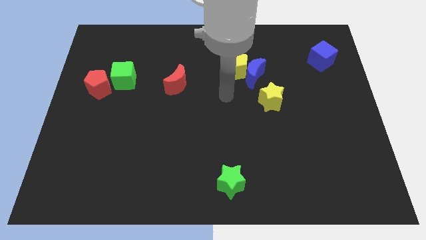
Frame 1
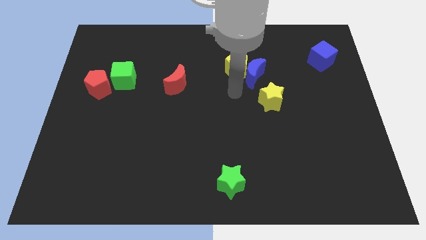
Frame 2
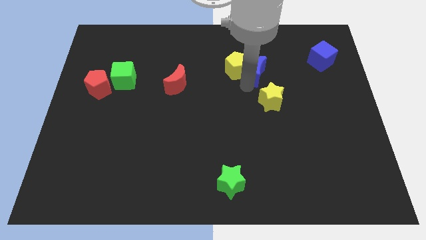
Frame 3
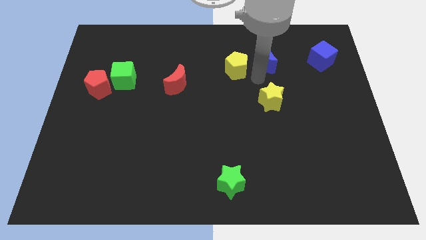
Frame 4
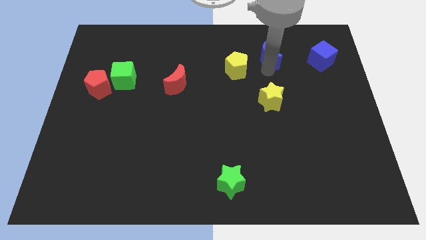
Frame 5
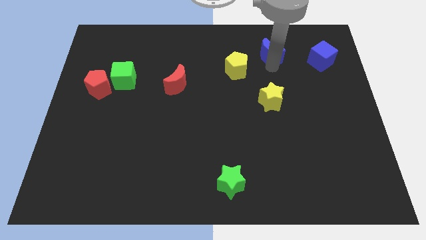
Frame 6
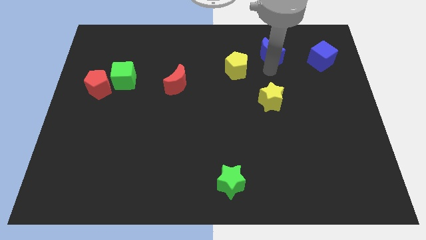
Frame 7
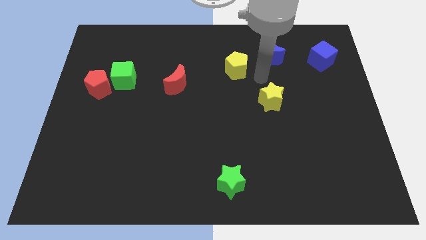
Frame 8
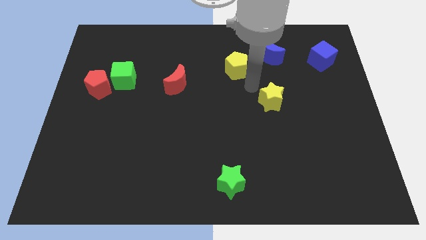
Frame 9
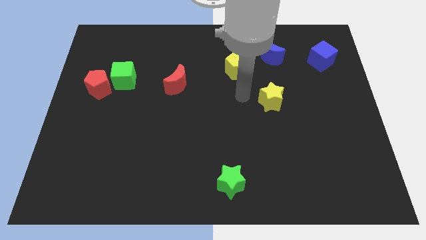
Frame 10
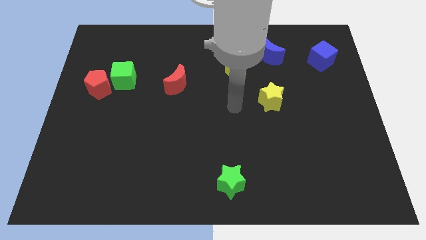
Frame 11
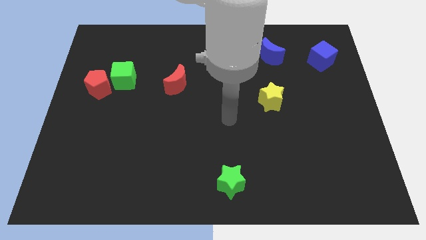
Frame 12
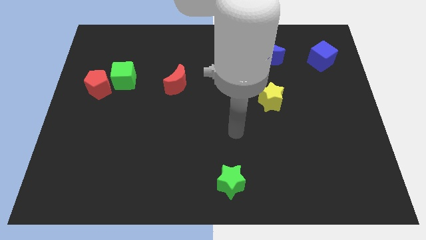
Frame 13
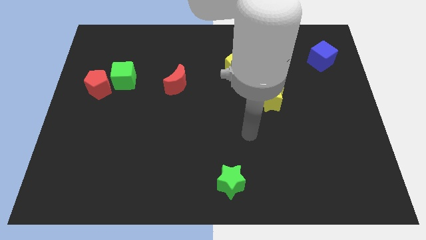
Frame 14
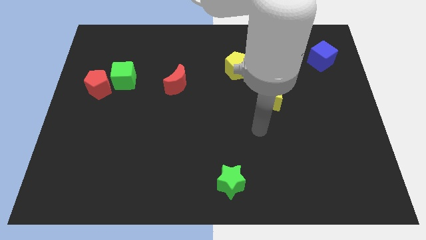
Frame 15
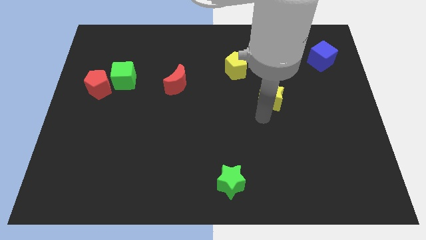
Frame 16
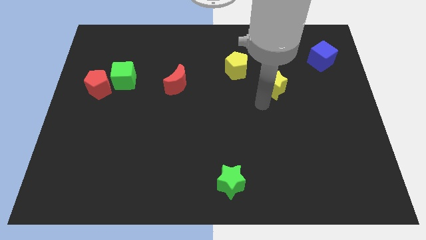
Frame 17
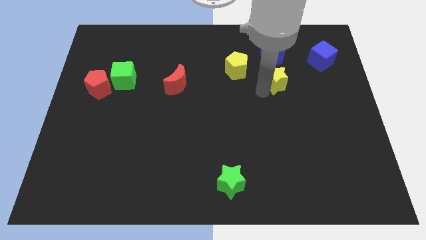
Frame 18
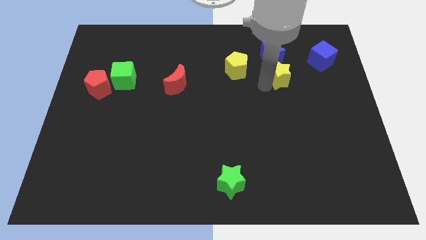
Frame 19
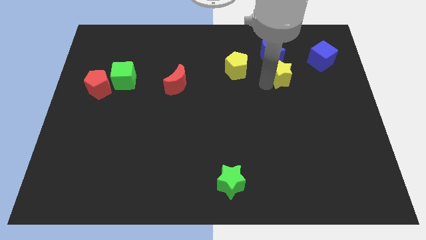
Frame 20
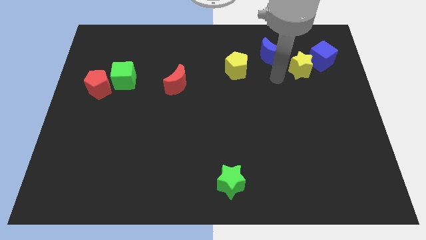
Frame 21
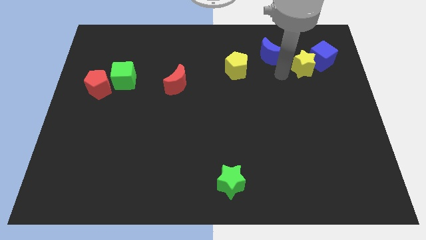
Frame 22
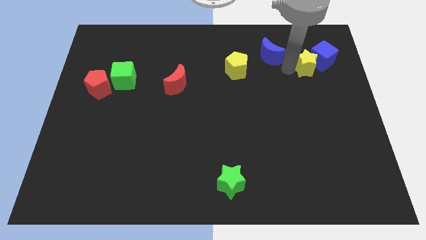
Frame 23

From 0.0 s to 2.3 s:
push yellow star into blue cube

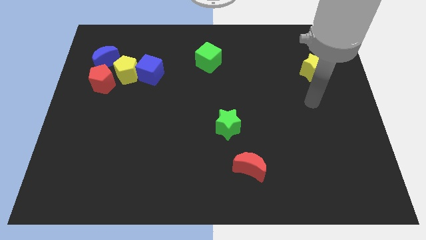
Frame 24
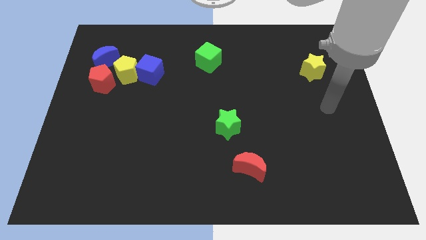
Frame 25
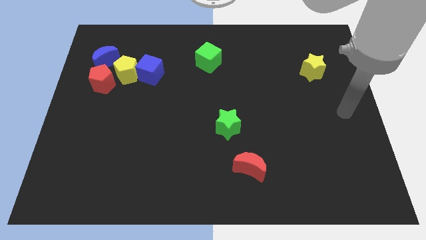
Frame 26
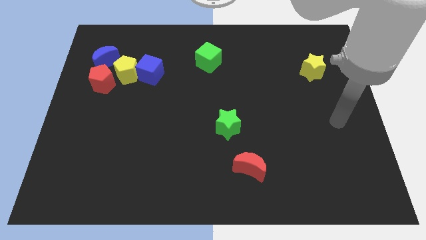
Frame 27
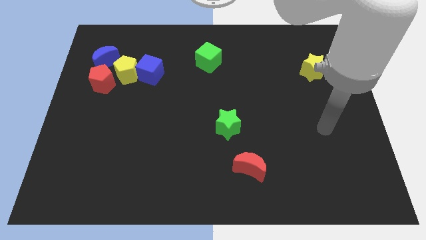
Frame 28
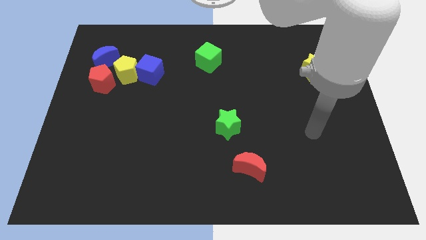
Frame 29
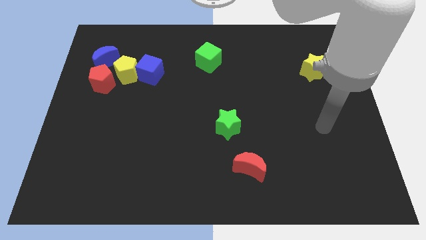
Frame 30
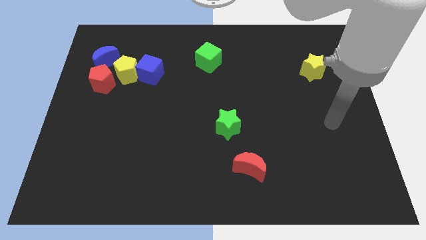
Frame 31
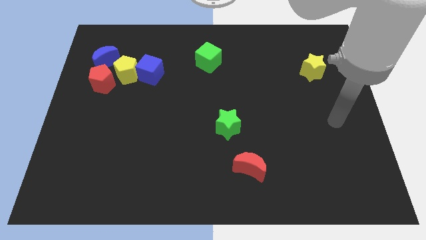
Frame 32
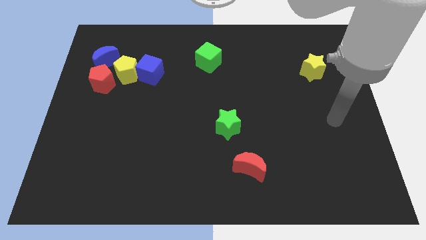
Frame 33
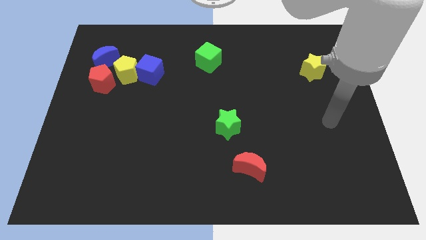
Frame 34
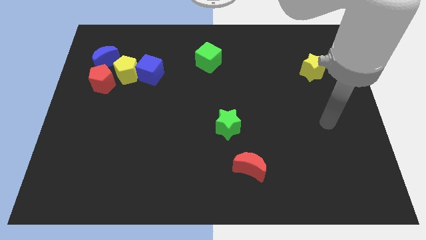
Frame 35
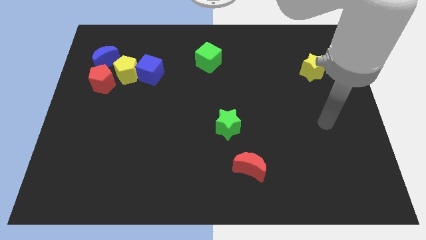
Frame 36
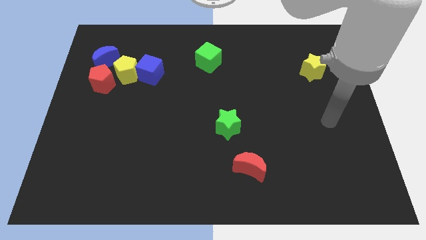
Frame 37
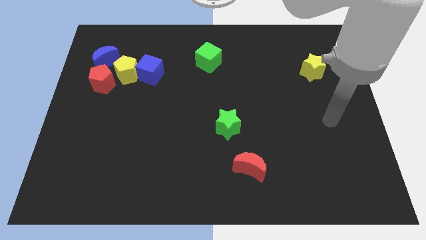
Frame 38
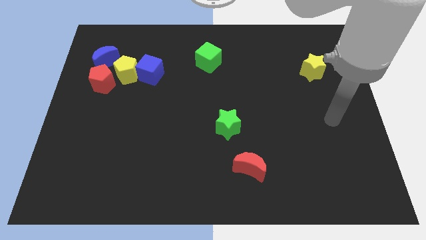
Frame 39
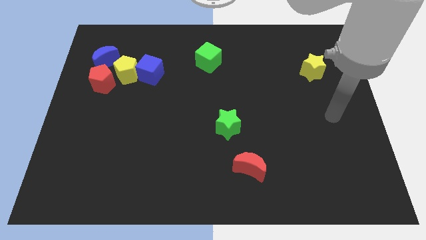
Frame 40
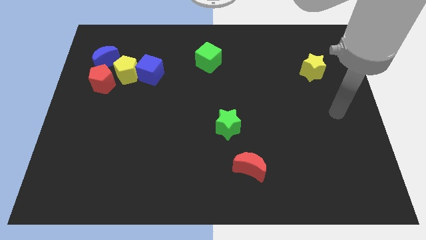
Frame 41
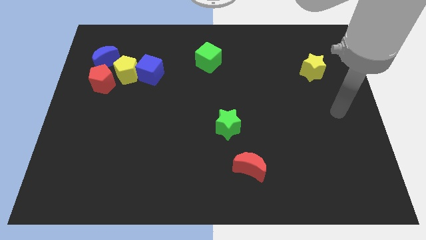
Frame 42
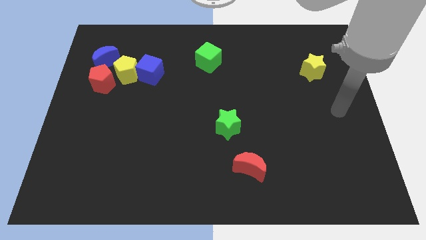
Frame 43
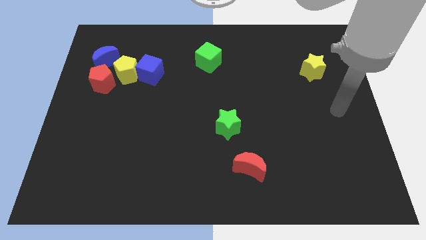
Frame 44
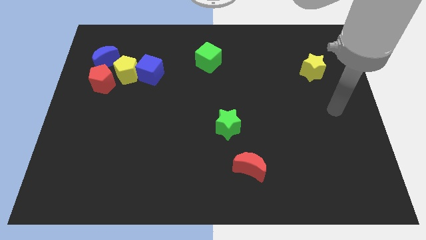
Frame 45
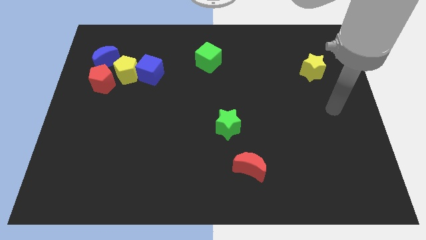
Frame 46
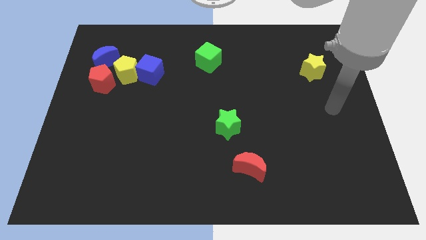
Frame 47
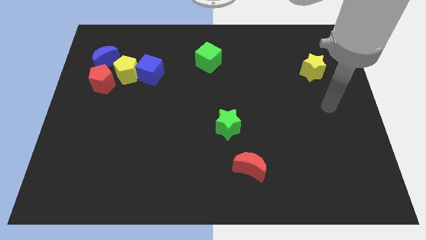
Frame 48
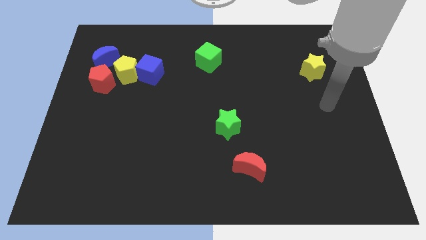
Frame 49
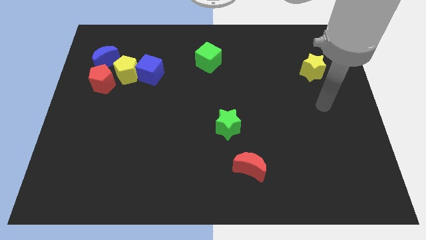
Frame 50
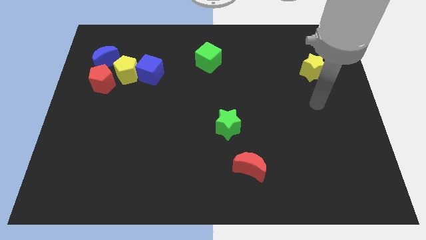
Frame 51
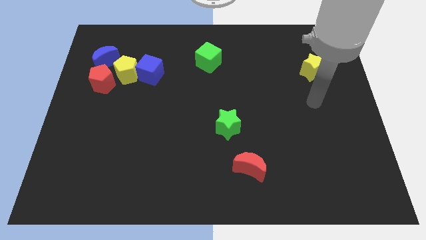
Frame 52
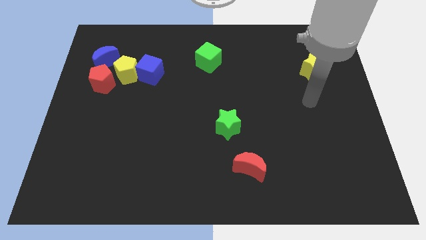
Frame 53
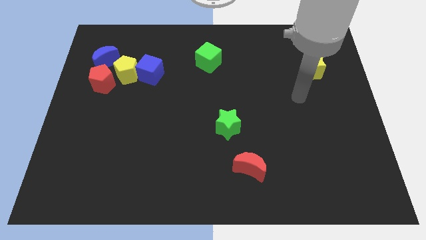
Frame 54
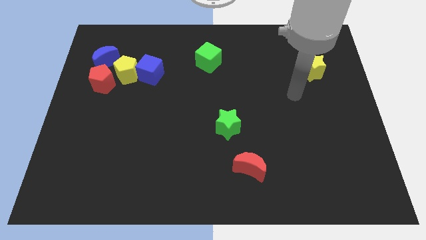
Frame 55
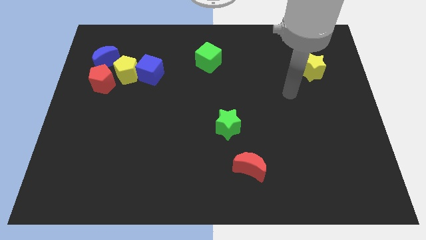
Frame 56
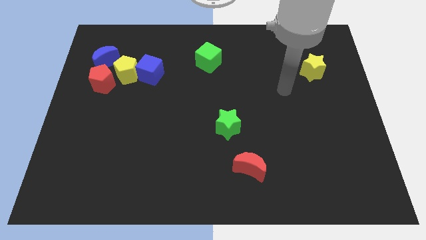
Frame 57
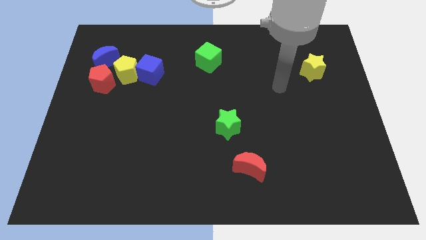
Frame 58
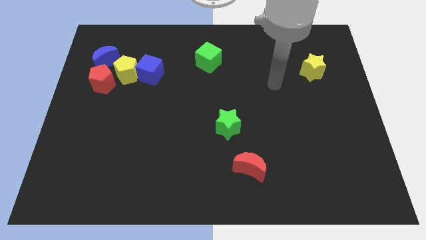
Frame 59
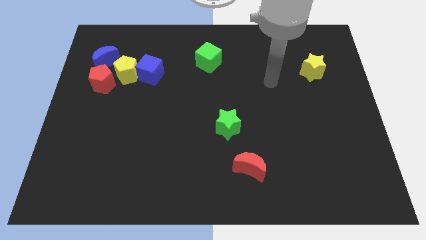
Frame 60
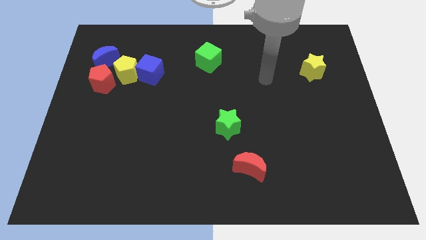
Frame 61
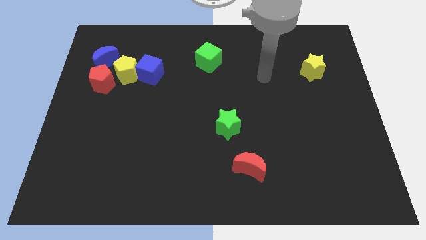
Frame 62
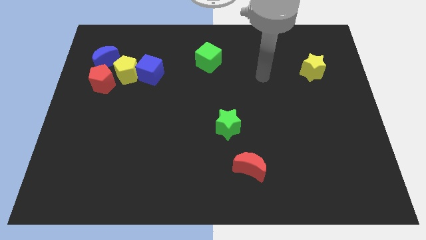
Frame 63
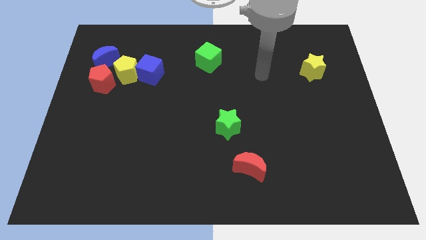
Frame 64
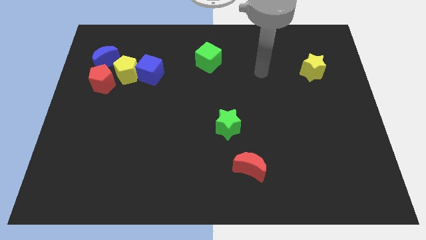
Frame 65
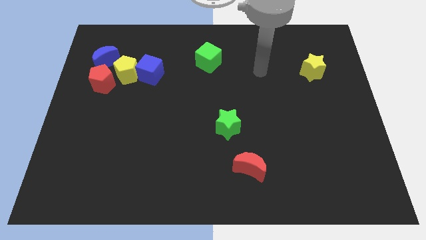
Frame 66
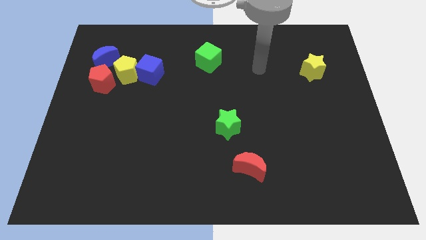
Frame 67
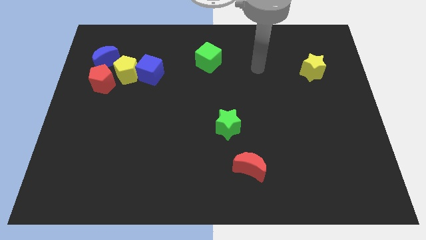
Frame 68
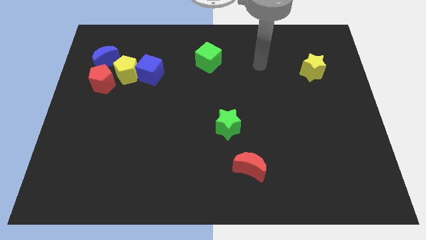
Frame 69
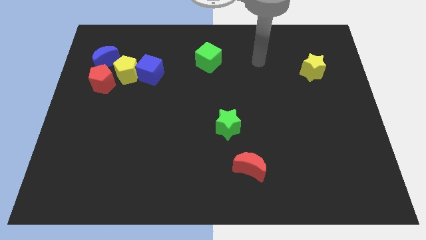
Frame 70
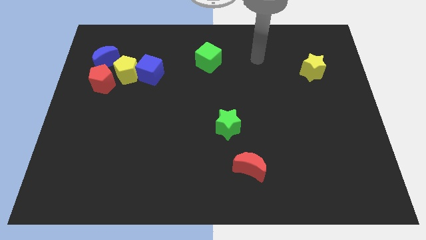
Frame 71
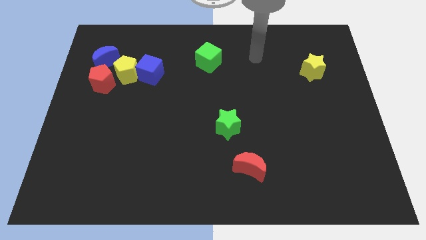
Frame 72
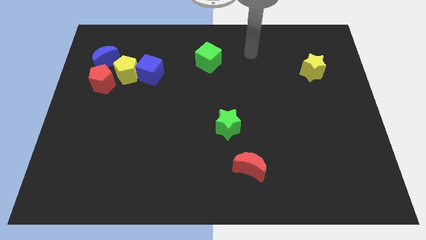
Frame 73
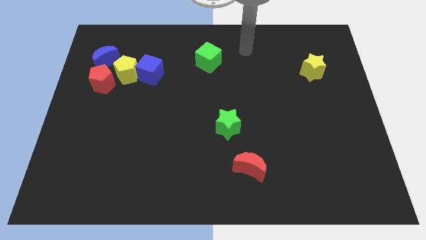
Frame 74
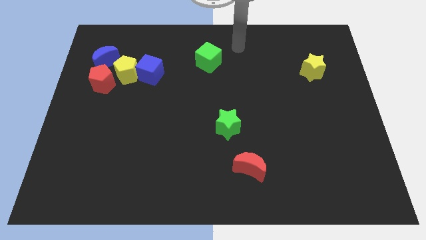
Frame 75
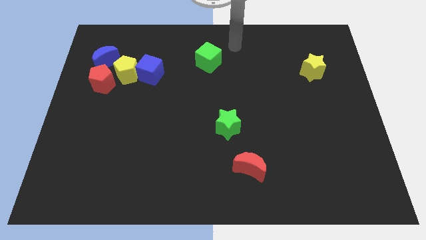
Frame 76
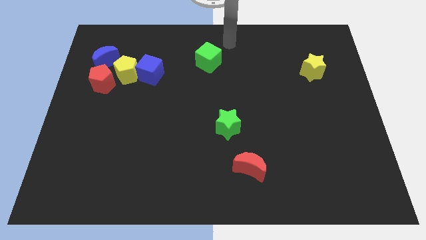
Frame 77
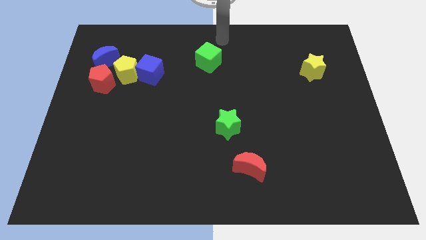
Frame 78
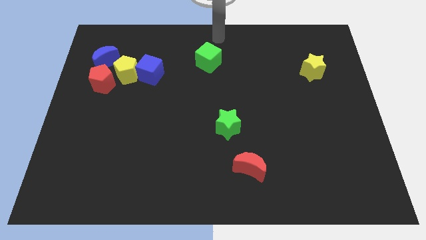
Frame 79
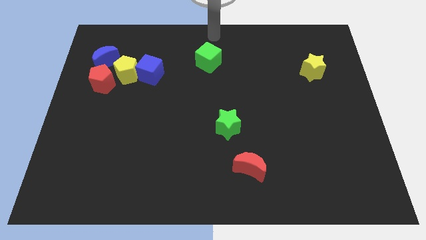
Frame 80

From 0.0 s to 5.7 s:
place arm above the green cube

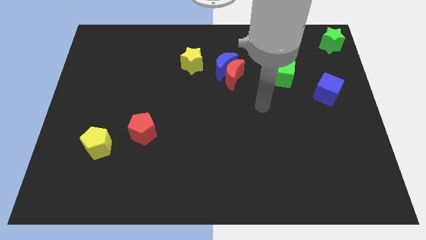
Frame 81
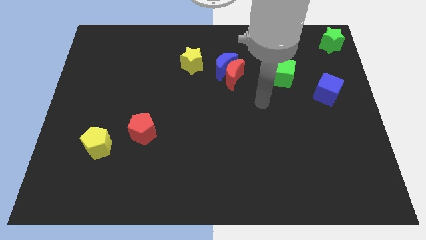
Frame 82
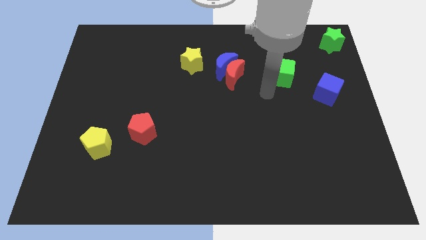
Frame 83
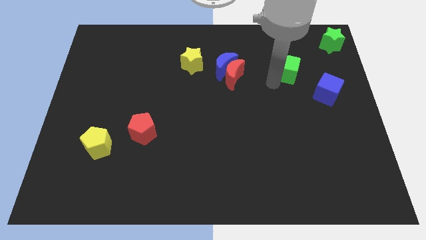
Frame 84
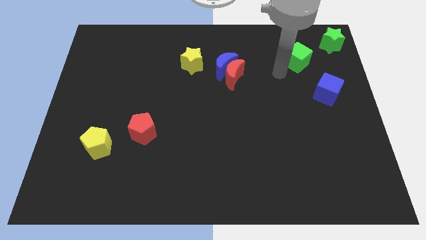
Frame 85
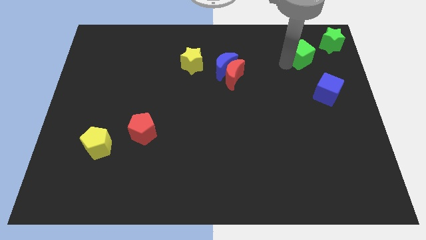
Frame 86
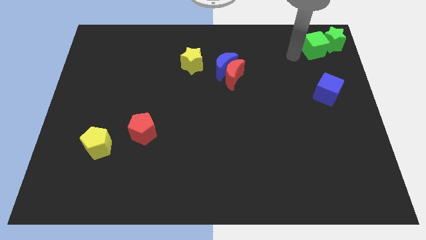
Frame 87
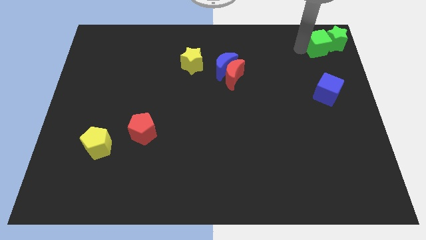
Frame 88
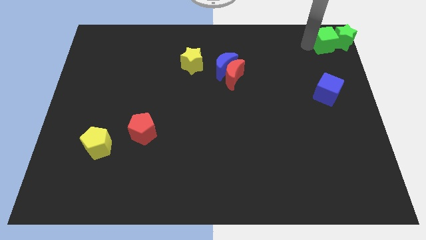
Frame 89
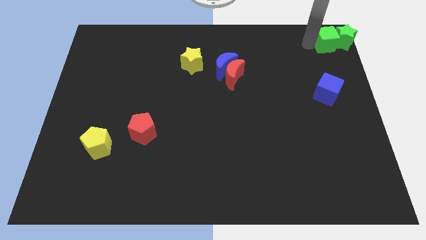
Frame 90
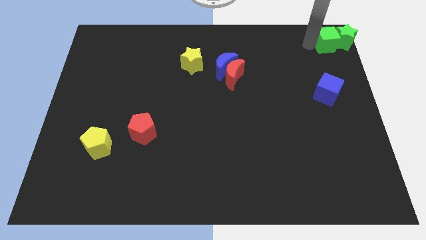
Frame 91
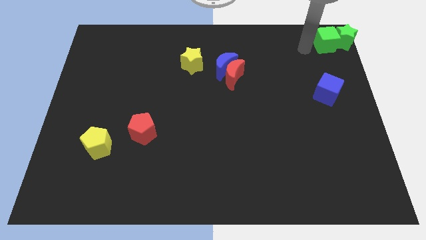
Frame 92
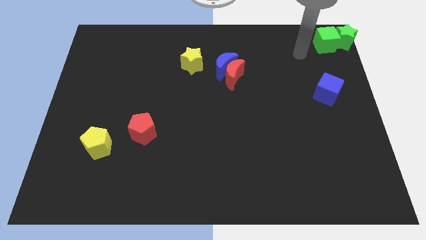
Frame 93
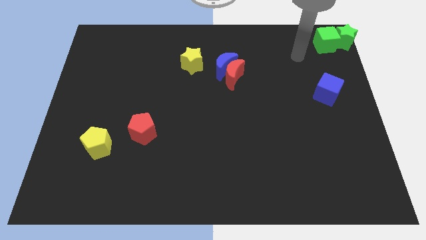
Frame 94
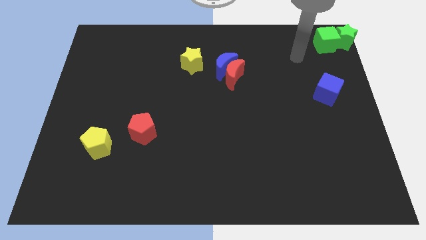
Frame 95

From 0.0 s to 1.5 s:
push the green cube into the green star
